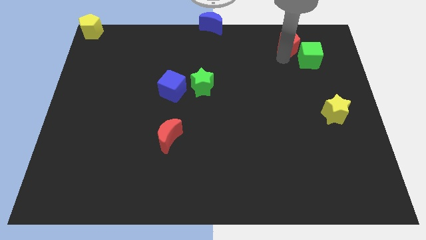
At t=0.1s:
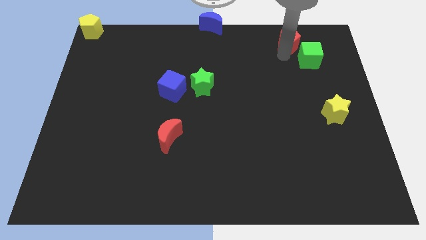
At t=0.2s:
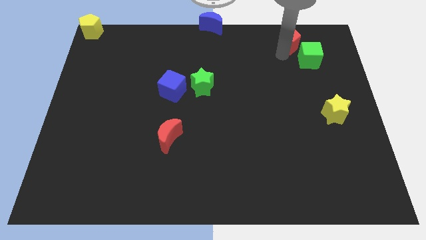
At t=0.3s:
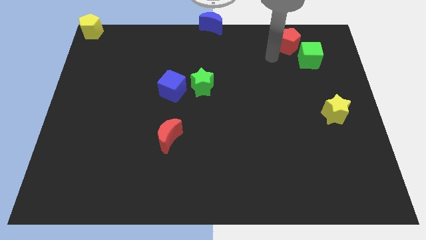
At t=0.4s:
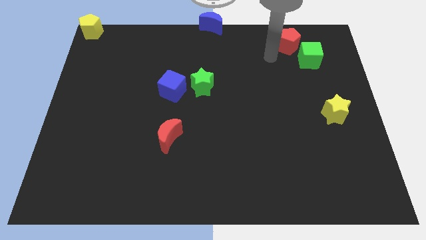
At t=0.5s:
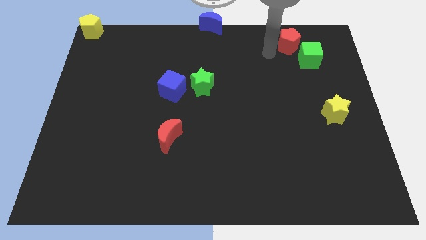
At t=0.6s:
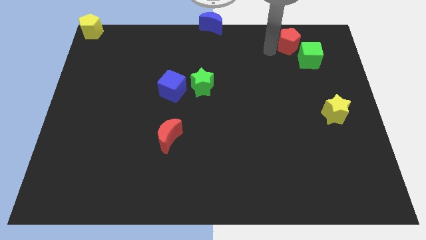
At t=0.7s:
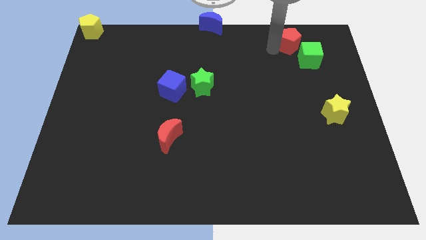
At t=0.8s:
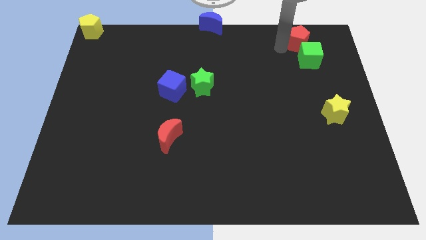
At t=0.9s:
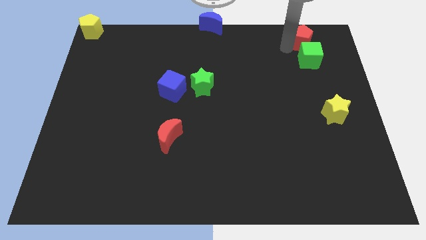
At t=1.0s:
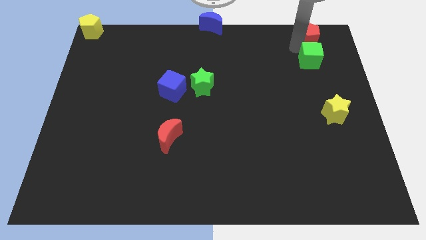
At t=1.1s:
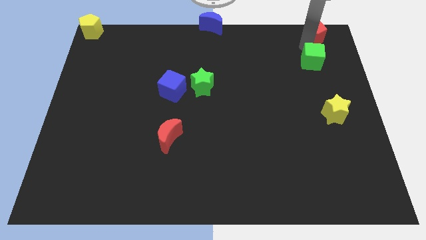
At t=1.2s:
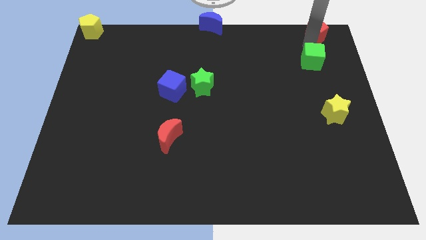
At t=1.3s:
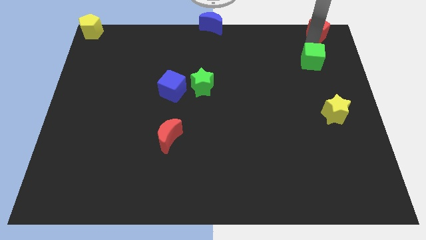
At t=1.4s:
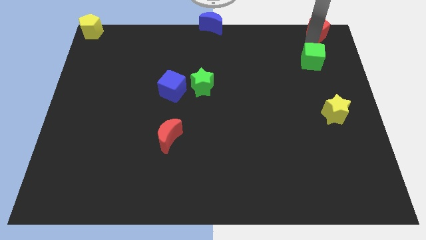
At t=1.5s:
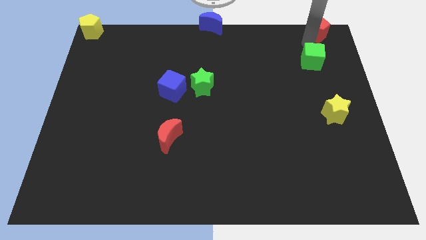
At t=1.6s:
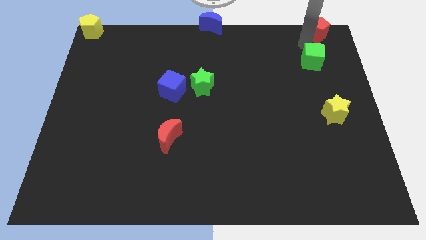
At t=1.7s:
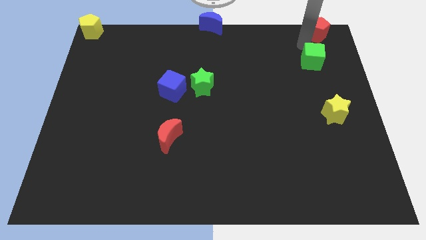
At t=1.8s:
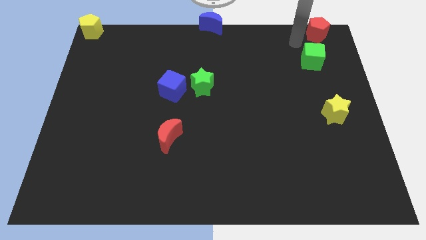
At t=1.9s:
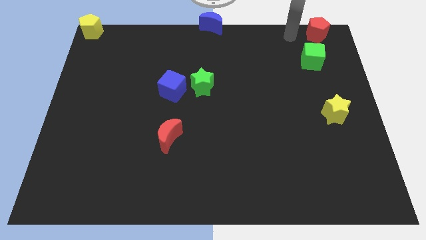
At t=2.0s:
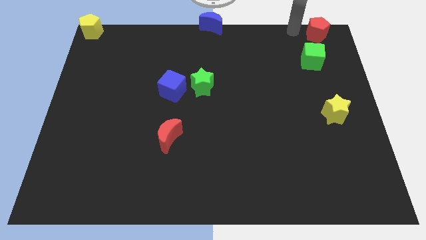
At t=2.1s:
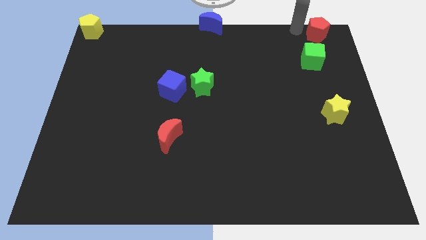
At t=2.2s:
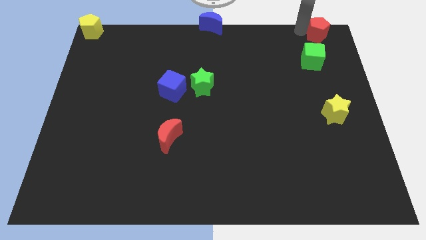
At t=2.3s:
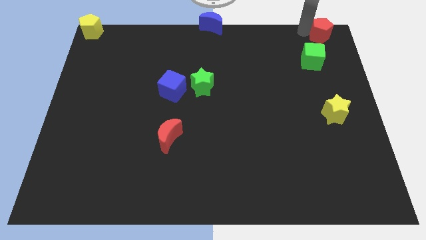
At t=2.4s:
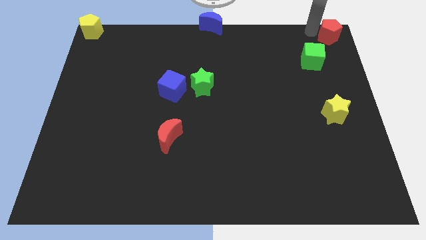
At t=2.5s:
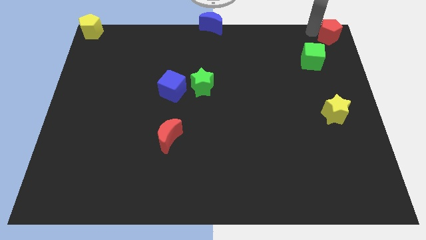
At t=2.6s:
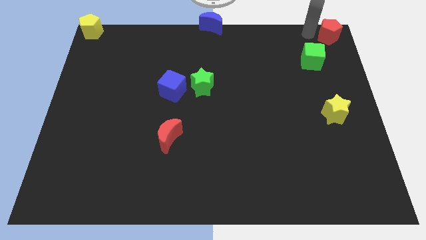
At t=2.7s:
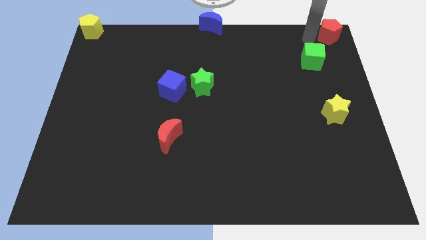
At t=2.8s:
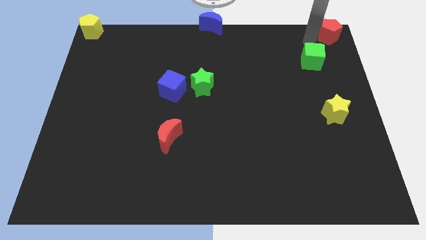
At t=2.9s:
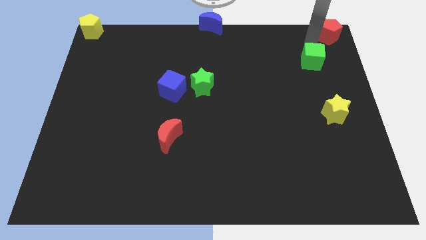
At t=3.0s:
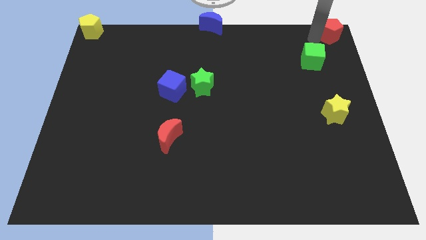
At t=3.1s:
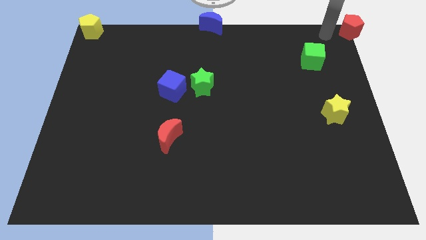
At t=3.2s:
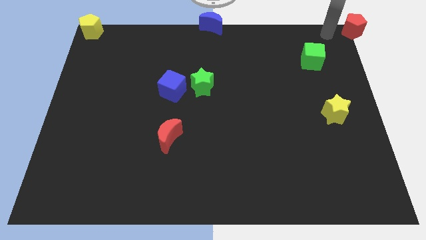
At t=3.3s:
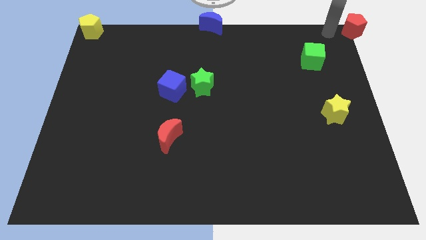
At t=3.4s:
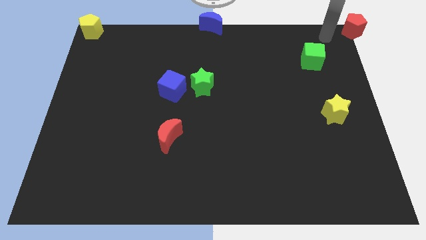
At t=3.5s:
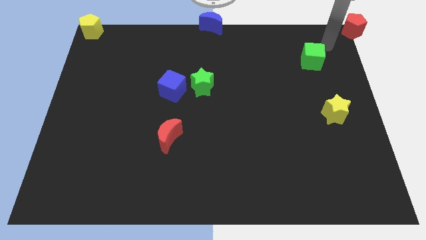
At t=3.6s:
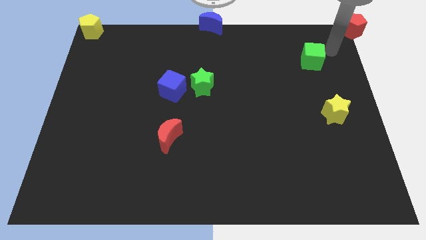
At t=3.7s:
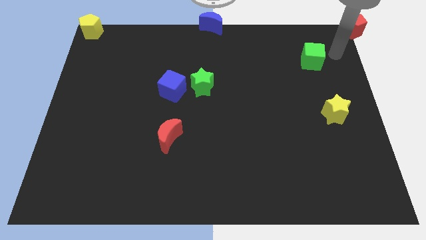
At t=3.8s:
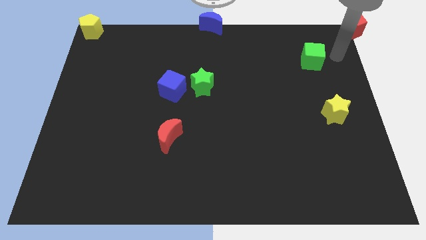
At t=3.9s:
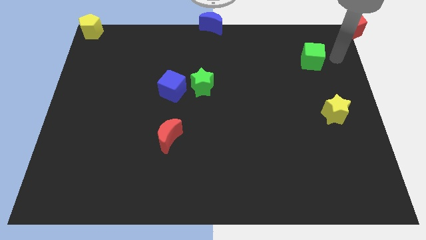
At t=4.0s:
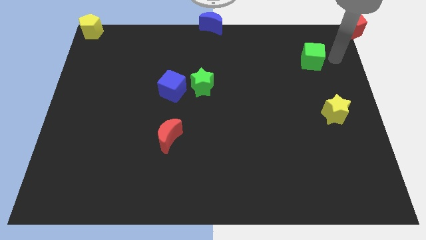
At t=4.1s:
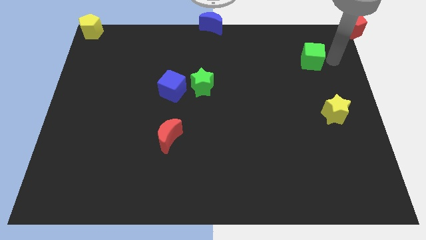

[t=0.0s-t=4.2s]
push the red pentagon to the top right corner of the board

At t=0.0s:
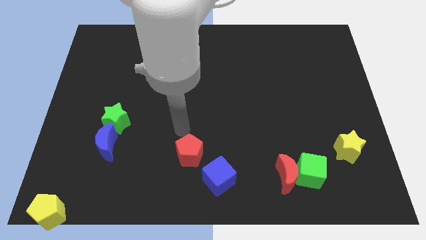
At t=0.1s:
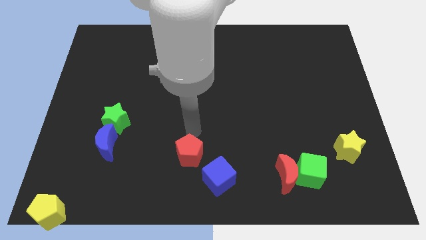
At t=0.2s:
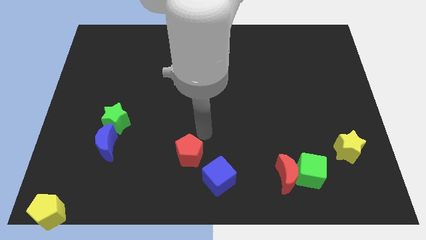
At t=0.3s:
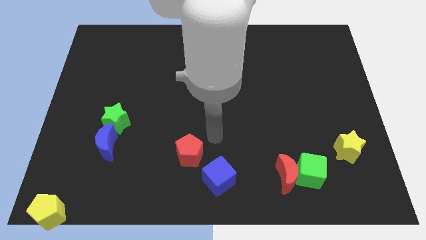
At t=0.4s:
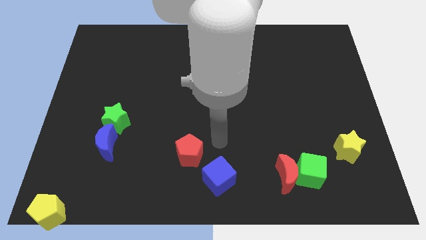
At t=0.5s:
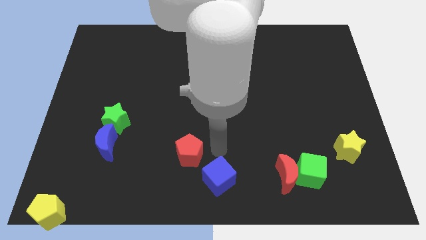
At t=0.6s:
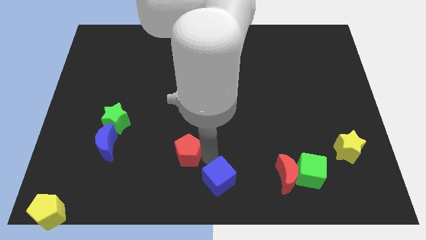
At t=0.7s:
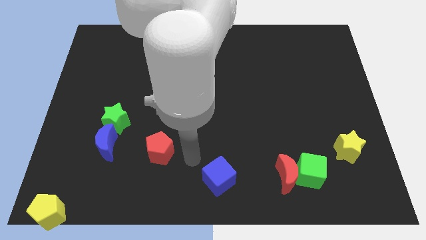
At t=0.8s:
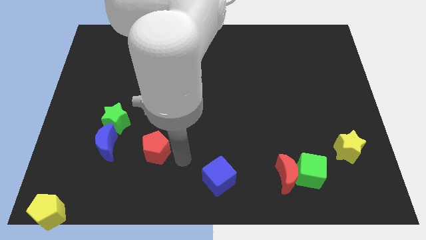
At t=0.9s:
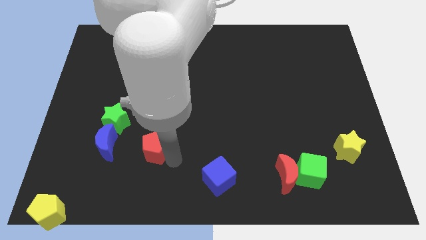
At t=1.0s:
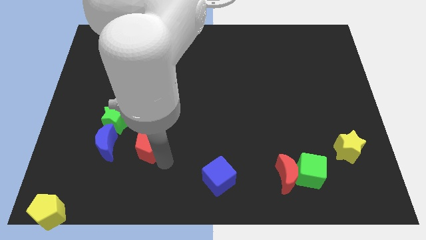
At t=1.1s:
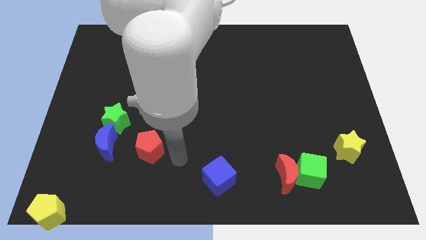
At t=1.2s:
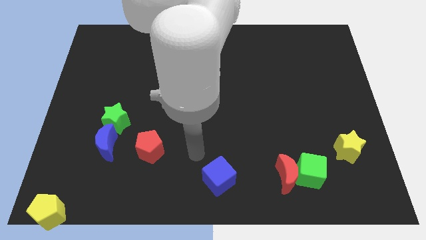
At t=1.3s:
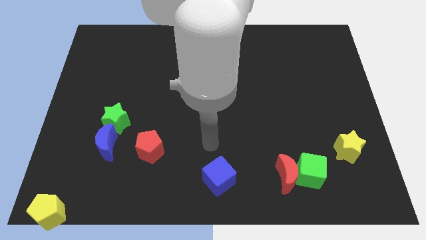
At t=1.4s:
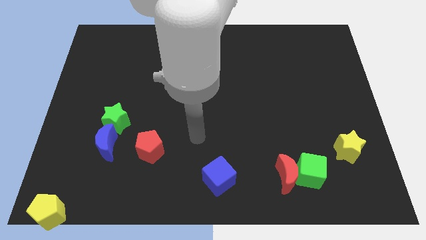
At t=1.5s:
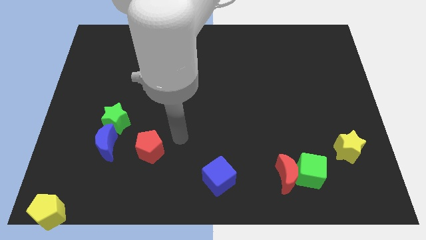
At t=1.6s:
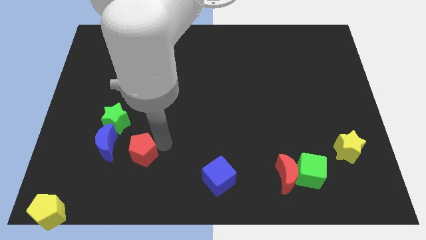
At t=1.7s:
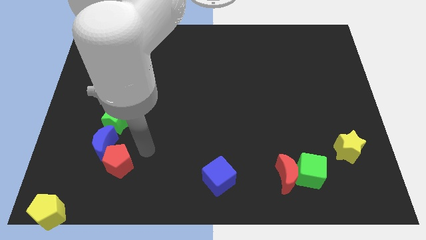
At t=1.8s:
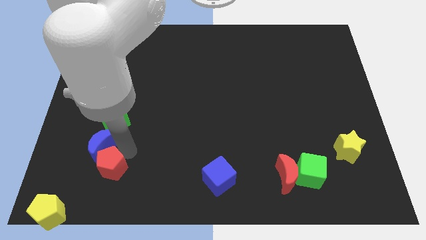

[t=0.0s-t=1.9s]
move the red pentagon towards the bottom right side of blue crescent

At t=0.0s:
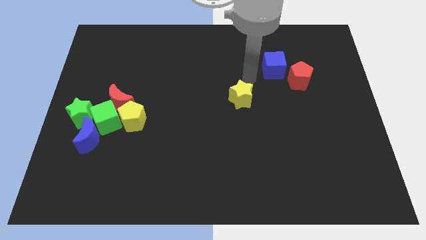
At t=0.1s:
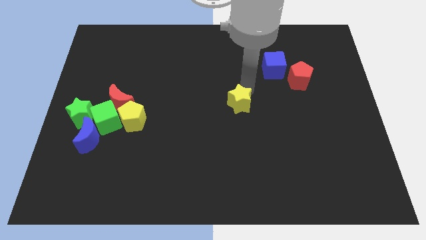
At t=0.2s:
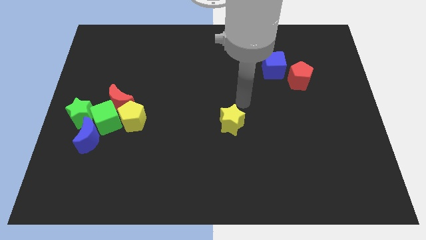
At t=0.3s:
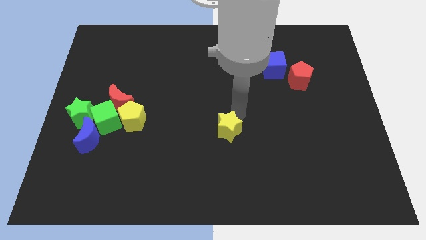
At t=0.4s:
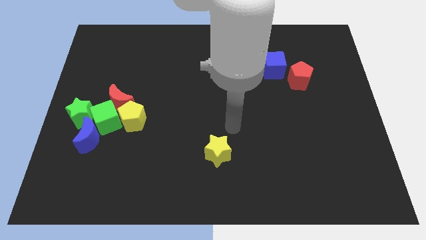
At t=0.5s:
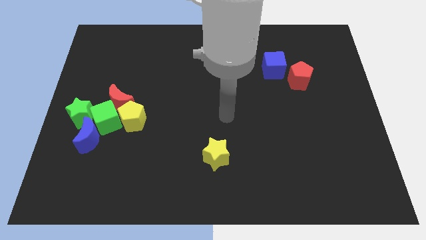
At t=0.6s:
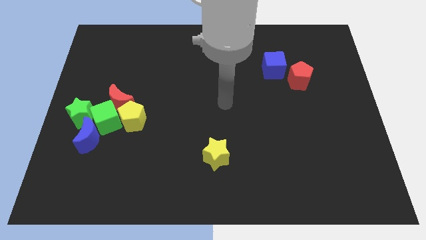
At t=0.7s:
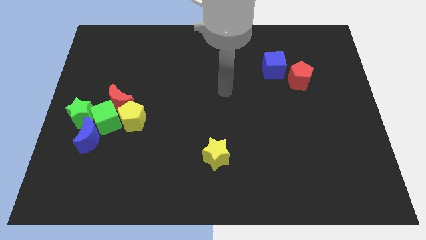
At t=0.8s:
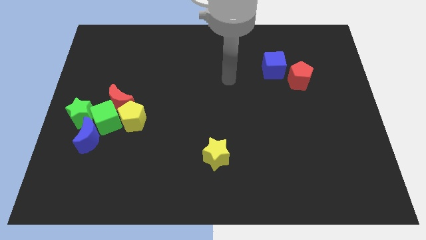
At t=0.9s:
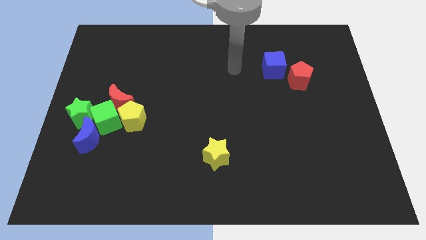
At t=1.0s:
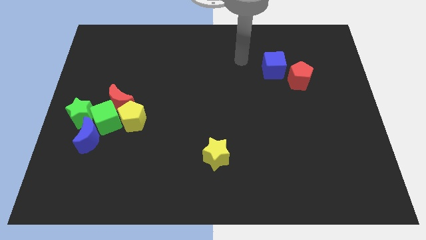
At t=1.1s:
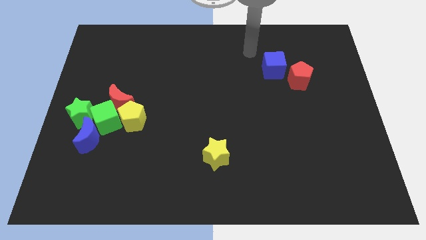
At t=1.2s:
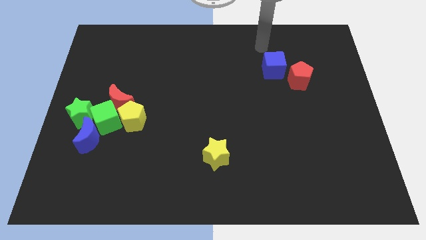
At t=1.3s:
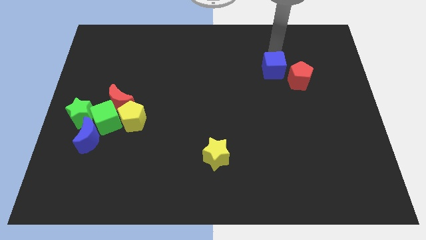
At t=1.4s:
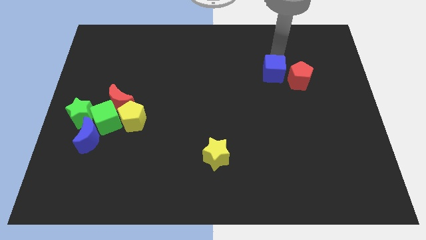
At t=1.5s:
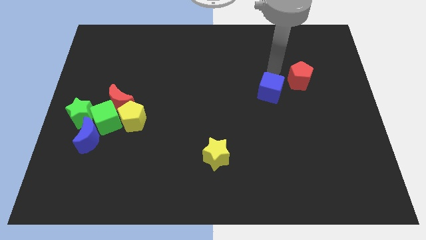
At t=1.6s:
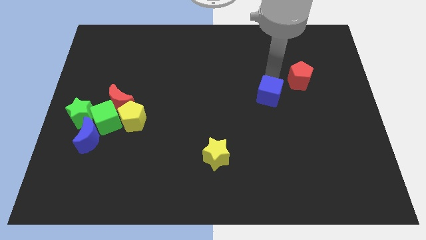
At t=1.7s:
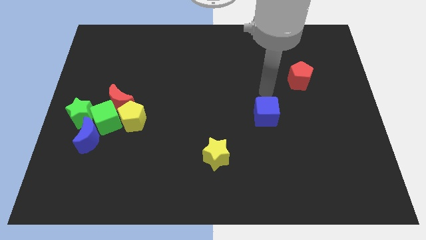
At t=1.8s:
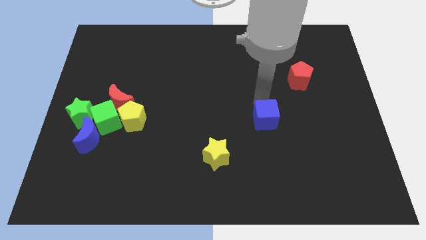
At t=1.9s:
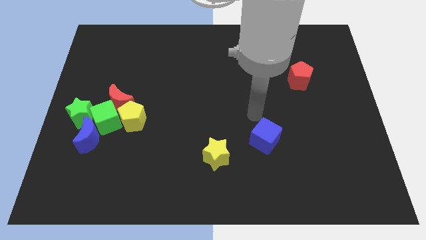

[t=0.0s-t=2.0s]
place the yellow star to the bottom center of the board

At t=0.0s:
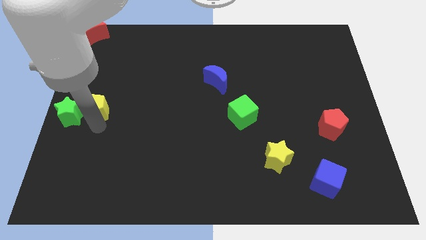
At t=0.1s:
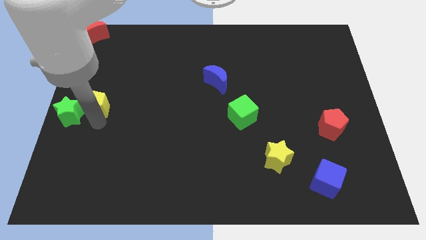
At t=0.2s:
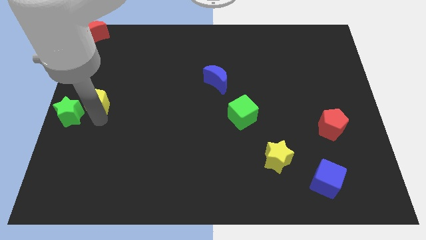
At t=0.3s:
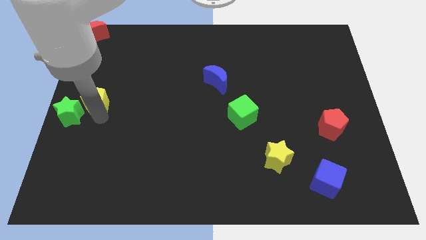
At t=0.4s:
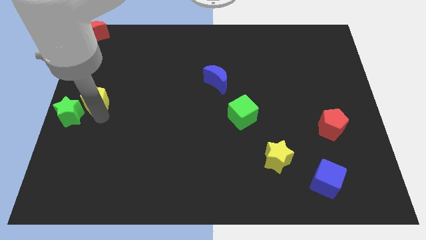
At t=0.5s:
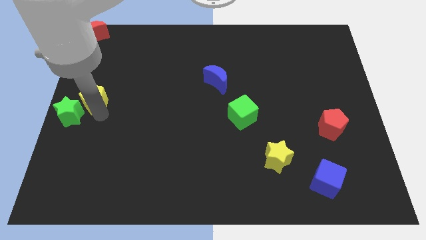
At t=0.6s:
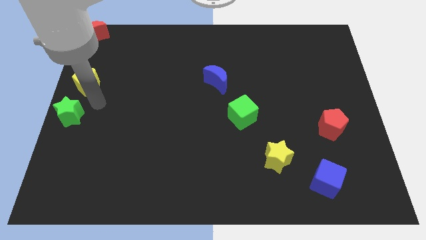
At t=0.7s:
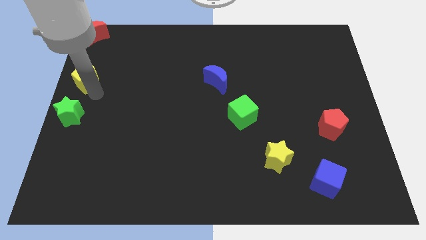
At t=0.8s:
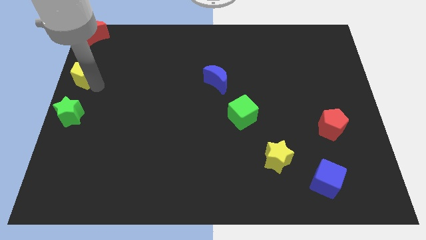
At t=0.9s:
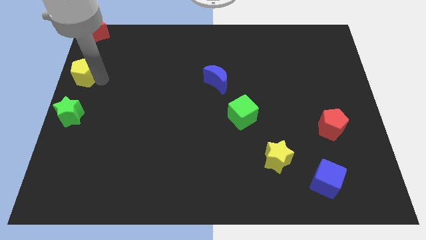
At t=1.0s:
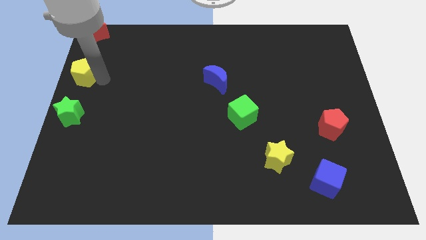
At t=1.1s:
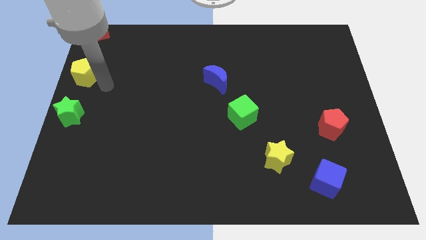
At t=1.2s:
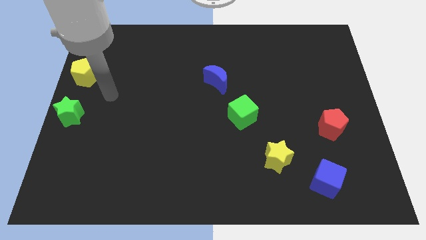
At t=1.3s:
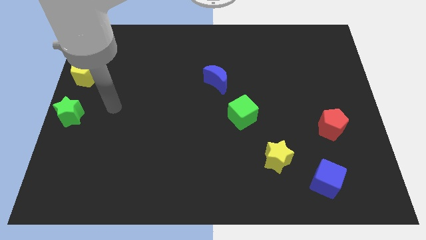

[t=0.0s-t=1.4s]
move the yellow pentagon above to the green star
